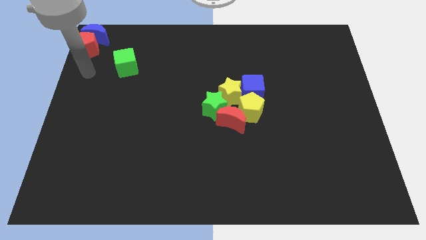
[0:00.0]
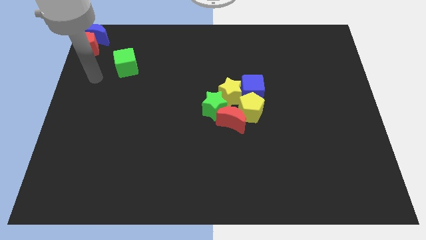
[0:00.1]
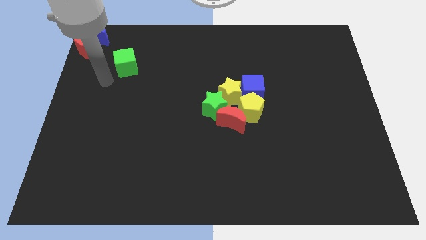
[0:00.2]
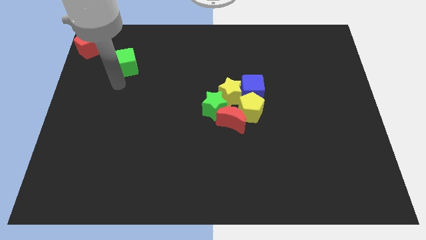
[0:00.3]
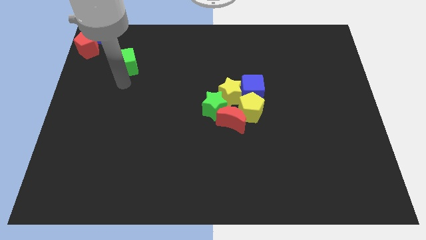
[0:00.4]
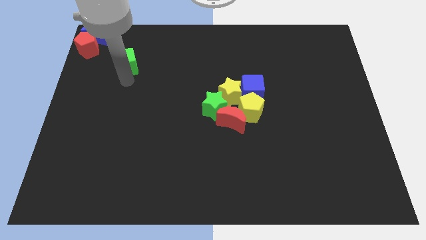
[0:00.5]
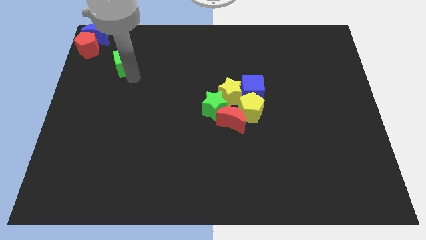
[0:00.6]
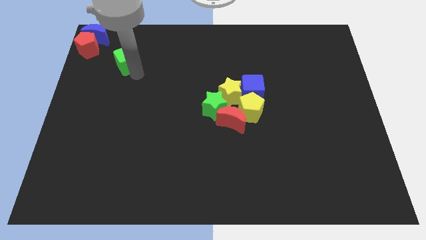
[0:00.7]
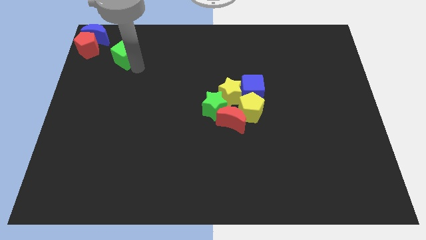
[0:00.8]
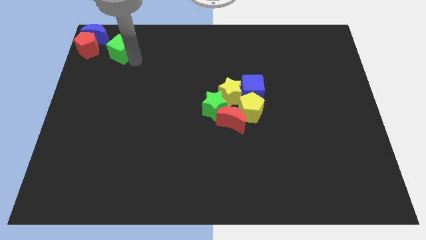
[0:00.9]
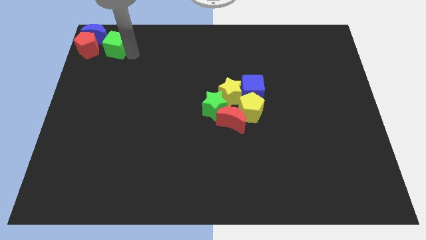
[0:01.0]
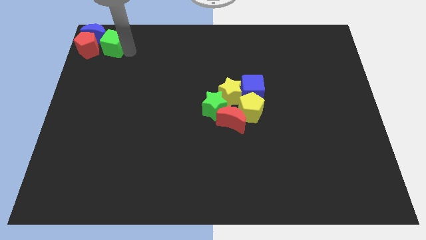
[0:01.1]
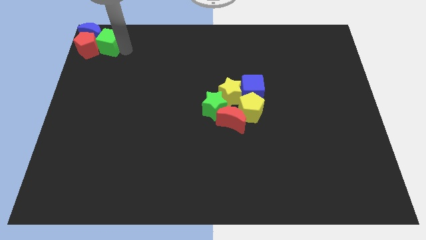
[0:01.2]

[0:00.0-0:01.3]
push the green cube bottom right to the blue moon

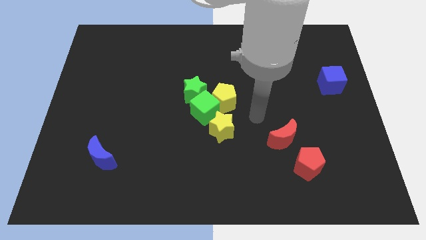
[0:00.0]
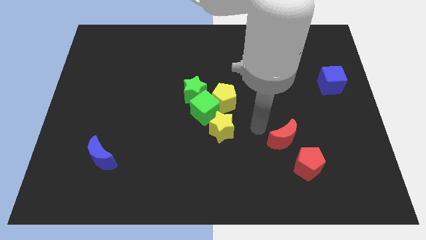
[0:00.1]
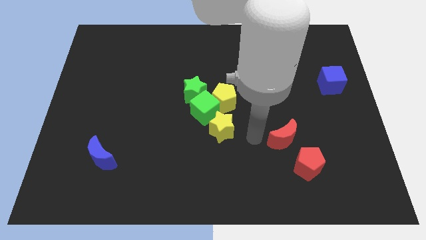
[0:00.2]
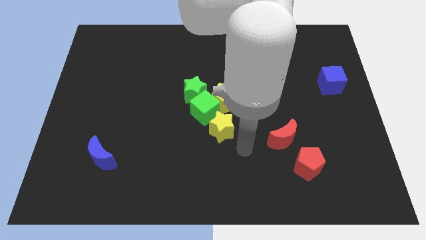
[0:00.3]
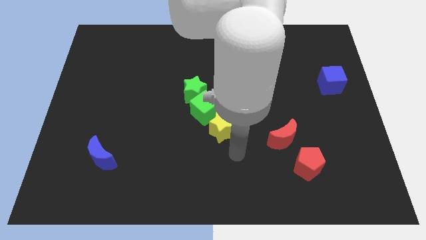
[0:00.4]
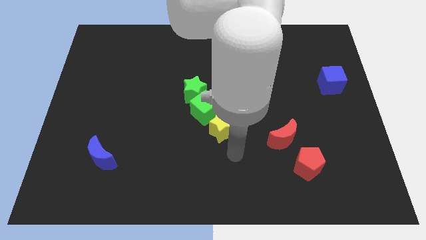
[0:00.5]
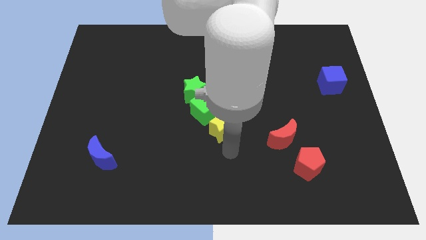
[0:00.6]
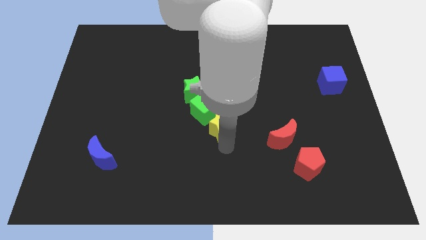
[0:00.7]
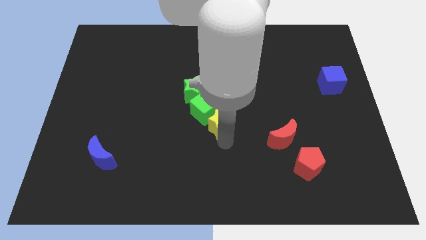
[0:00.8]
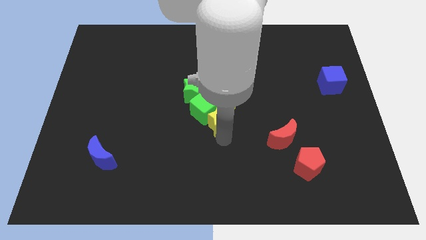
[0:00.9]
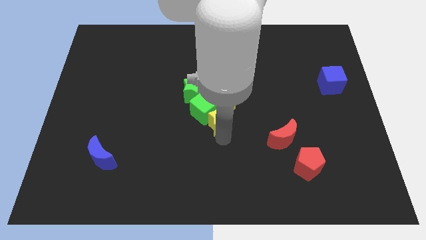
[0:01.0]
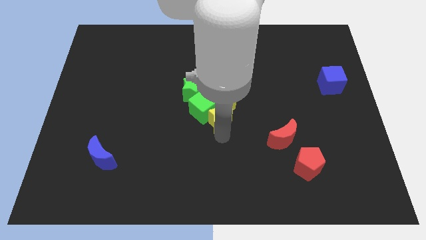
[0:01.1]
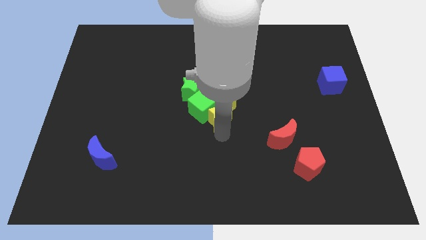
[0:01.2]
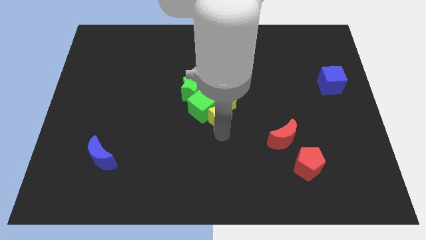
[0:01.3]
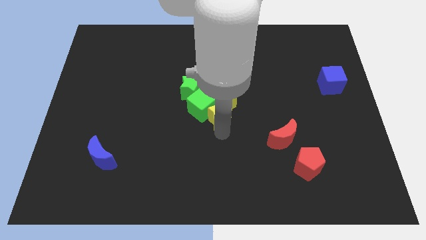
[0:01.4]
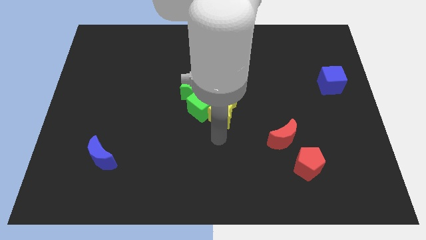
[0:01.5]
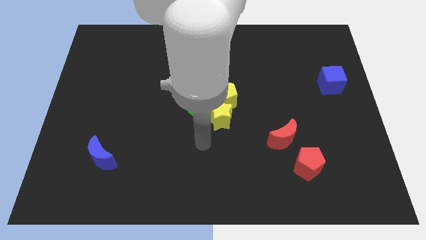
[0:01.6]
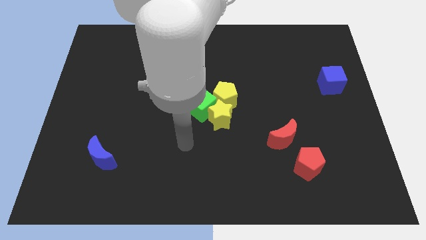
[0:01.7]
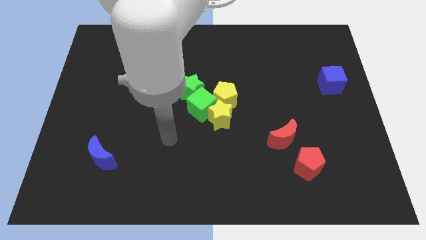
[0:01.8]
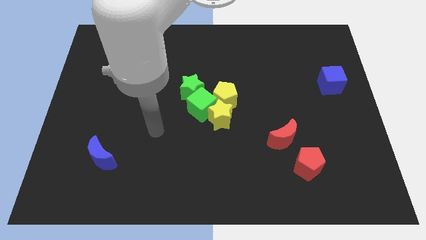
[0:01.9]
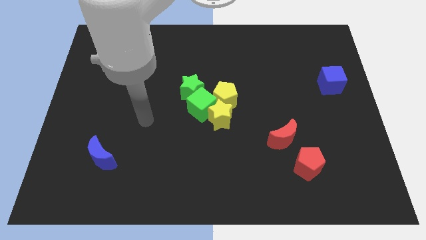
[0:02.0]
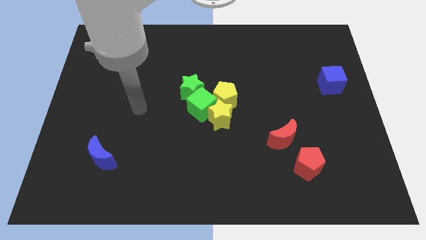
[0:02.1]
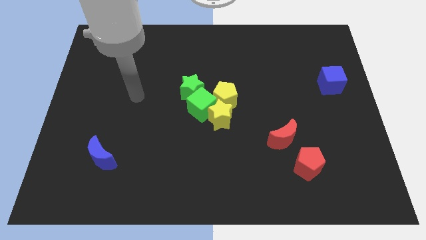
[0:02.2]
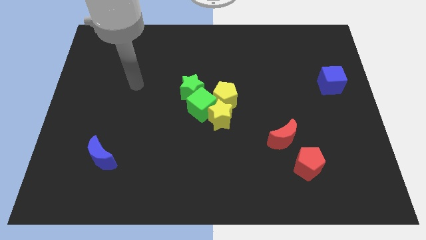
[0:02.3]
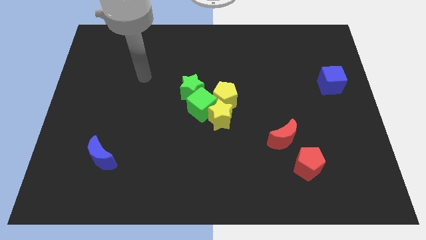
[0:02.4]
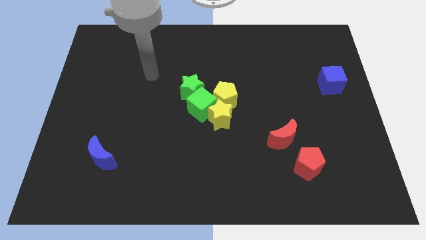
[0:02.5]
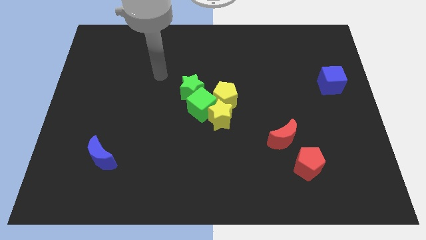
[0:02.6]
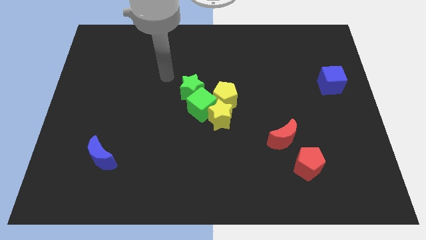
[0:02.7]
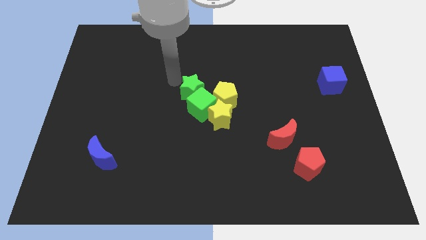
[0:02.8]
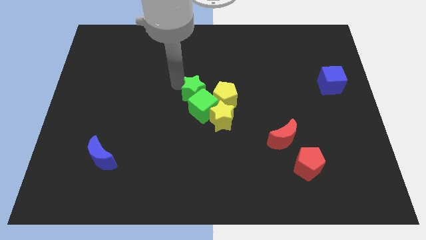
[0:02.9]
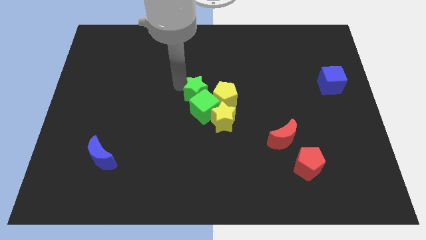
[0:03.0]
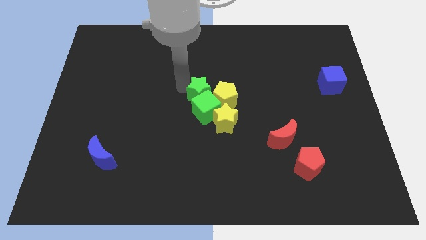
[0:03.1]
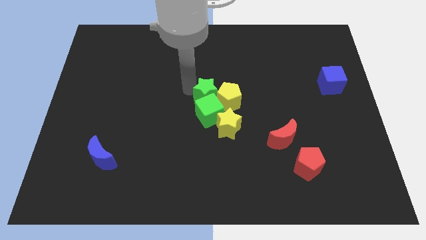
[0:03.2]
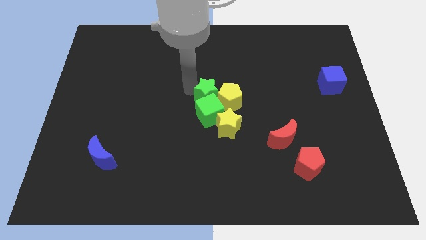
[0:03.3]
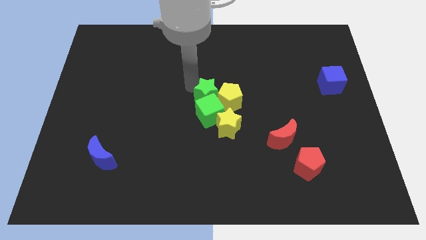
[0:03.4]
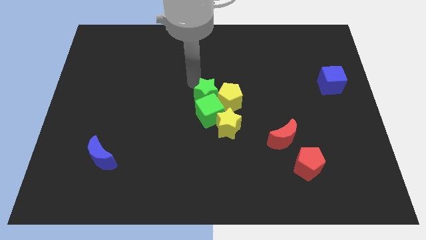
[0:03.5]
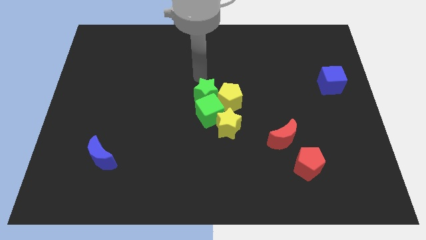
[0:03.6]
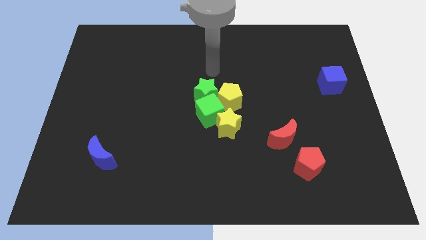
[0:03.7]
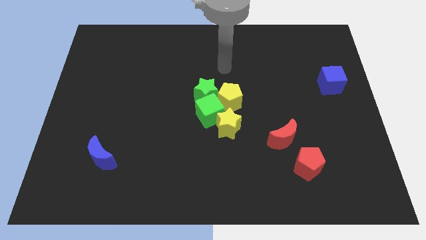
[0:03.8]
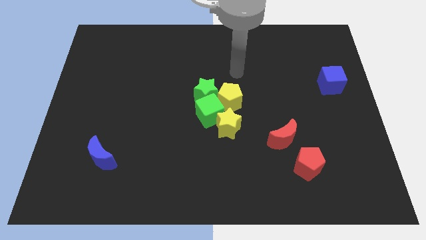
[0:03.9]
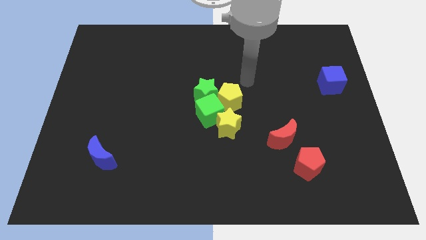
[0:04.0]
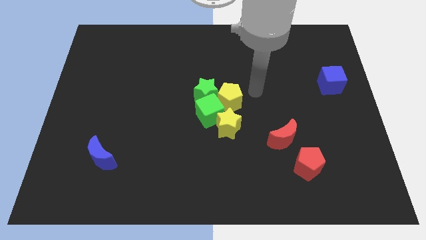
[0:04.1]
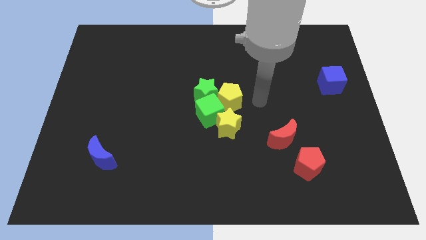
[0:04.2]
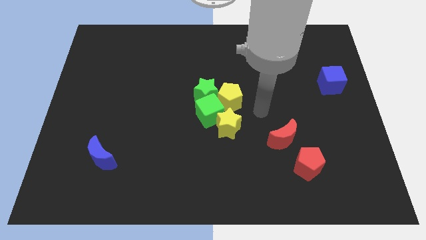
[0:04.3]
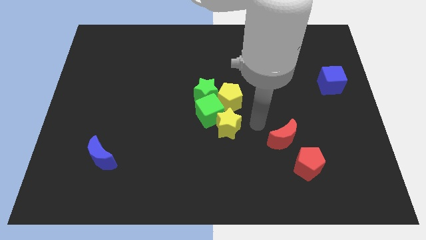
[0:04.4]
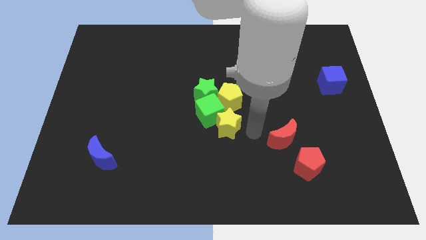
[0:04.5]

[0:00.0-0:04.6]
push the yellow star into the green cube

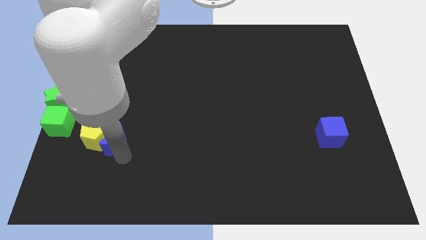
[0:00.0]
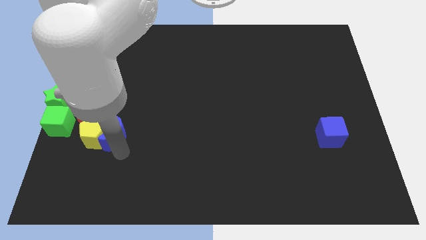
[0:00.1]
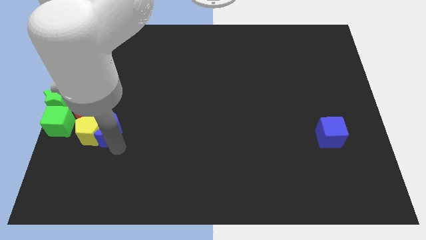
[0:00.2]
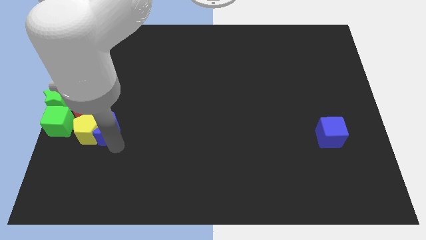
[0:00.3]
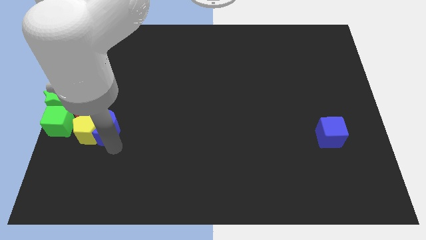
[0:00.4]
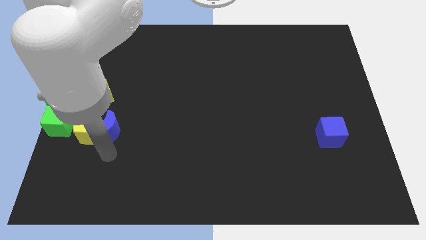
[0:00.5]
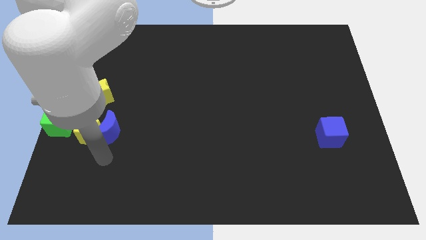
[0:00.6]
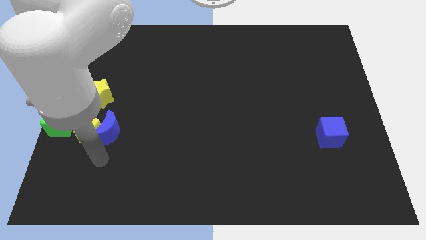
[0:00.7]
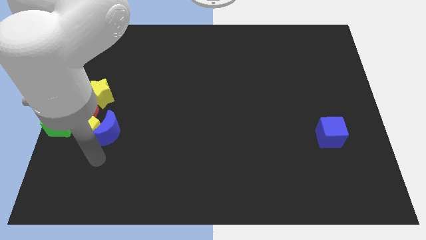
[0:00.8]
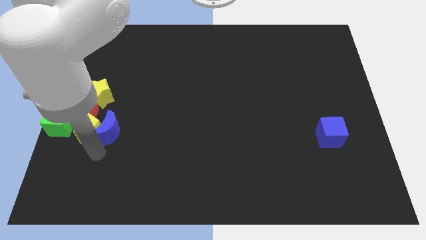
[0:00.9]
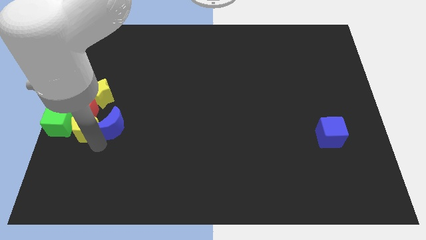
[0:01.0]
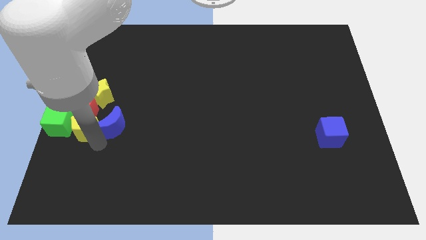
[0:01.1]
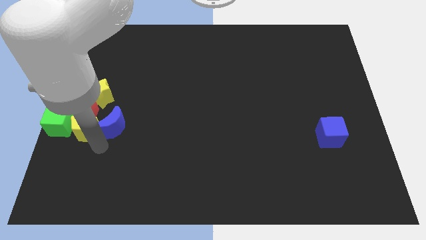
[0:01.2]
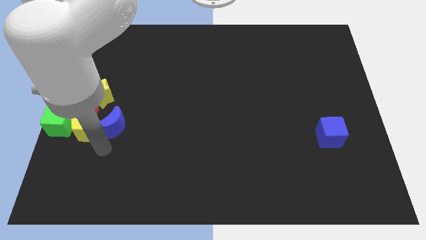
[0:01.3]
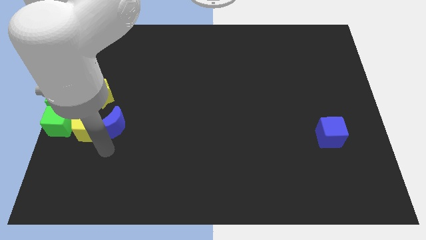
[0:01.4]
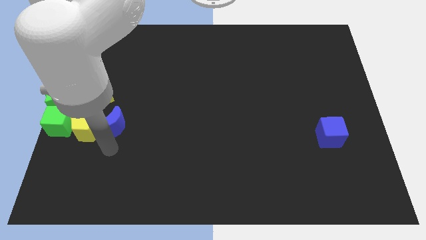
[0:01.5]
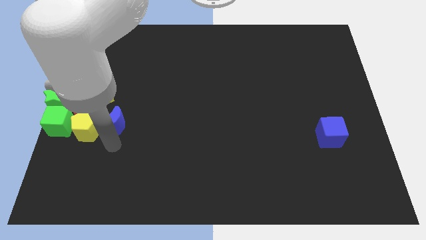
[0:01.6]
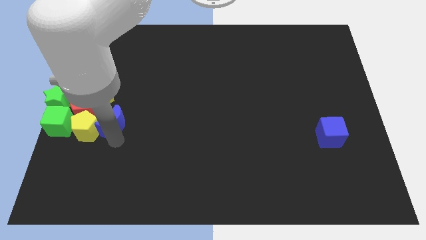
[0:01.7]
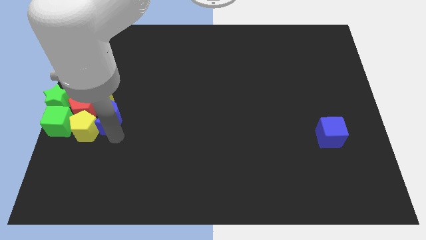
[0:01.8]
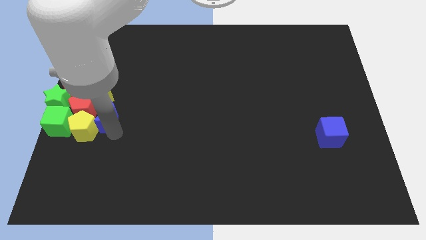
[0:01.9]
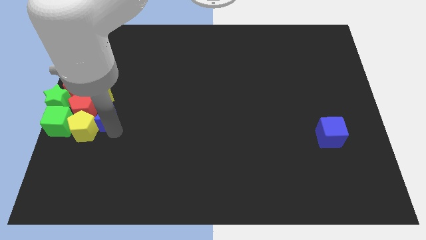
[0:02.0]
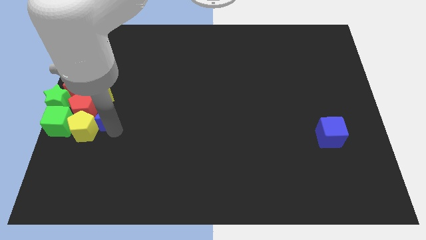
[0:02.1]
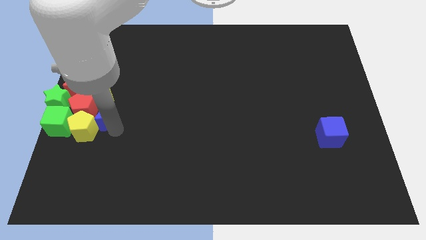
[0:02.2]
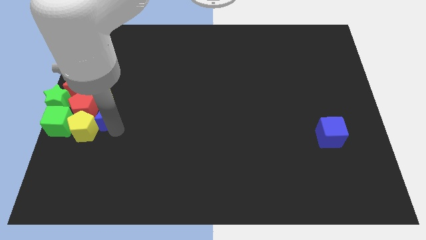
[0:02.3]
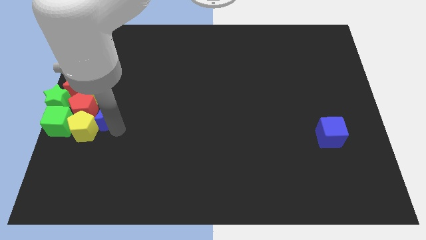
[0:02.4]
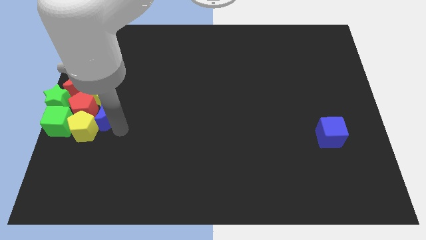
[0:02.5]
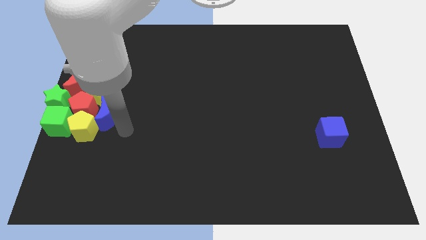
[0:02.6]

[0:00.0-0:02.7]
push the yellow pentagon into the red pentagon with the help of the blue crescent

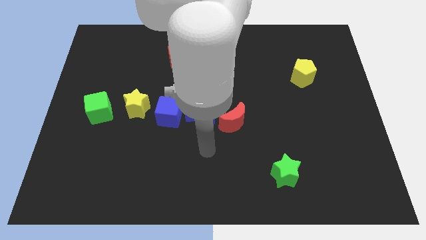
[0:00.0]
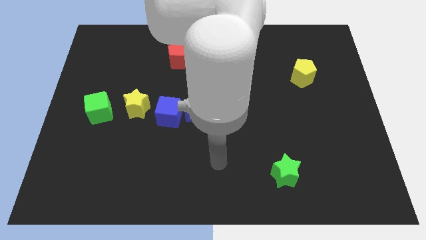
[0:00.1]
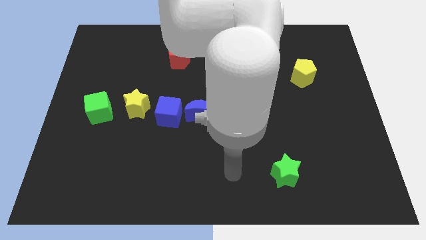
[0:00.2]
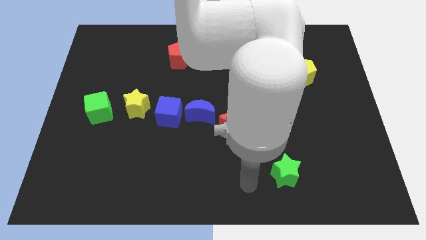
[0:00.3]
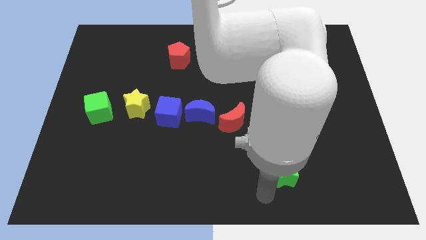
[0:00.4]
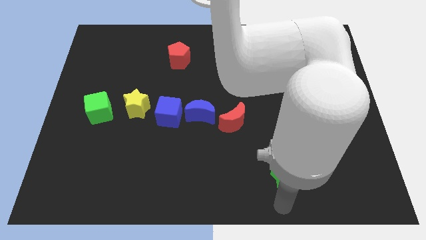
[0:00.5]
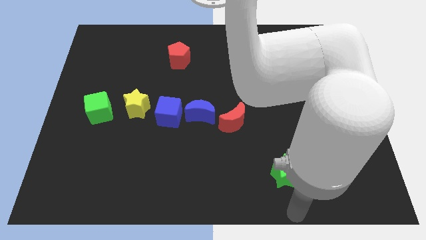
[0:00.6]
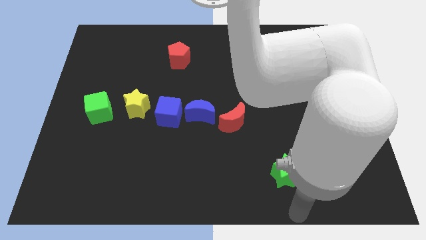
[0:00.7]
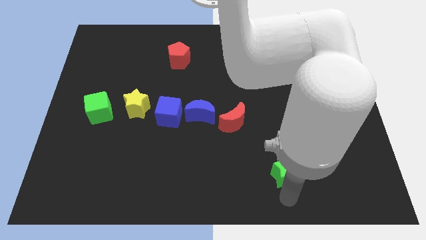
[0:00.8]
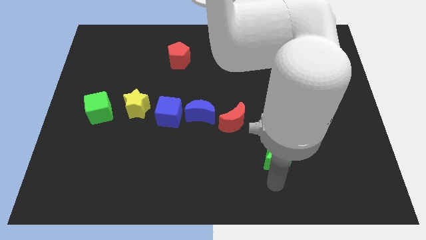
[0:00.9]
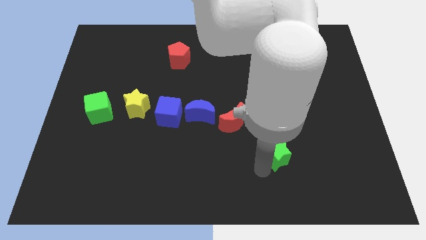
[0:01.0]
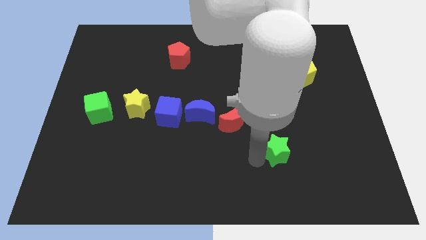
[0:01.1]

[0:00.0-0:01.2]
move your arm to the bottom of green star
